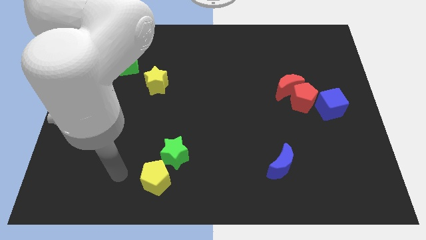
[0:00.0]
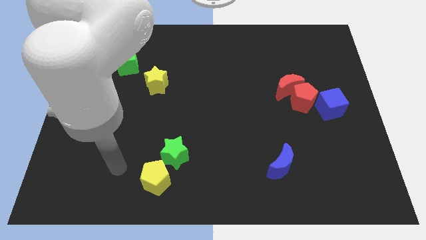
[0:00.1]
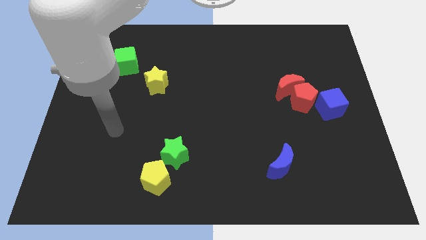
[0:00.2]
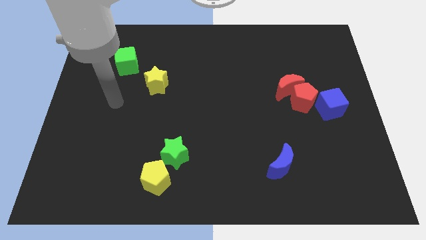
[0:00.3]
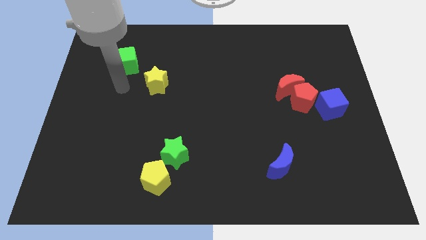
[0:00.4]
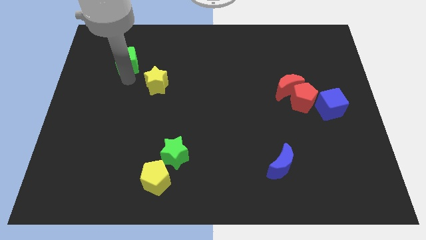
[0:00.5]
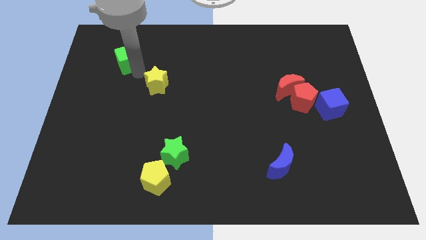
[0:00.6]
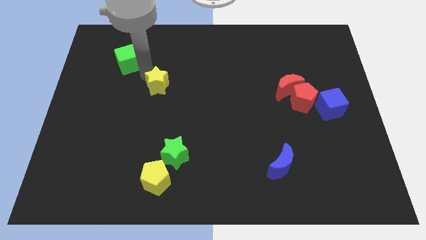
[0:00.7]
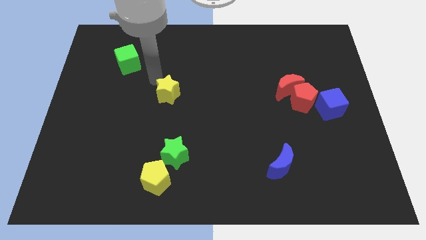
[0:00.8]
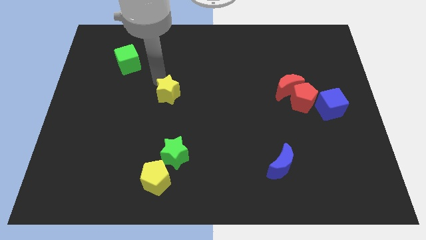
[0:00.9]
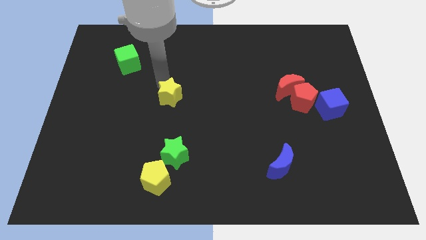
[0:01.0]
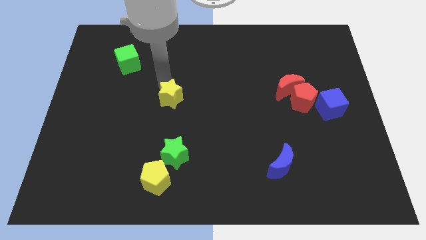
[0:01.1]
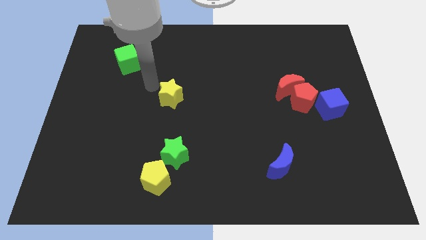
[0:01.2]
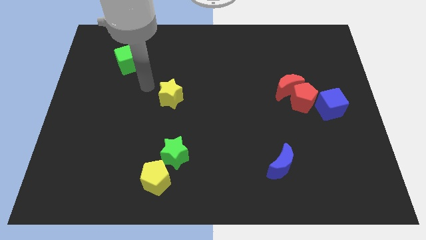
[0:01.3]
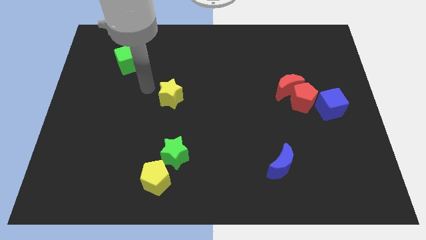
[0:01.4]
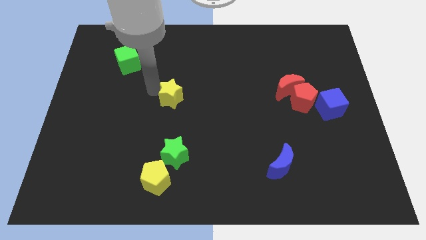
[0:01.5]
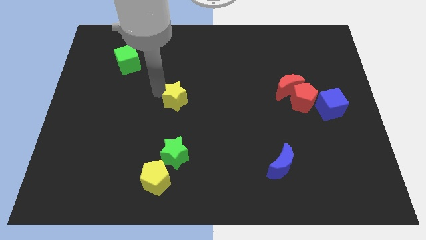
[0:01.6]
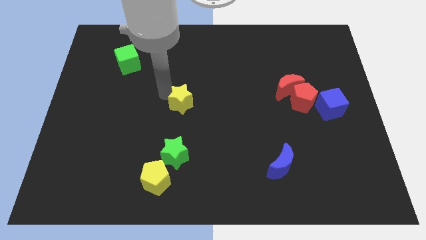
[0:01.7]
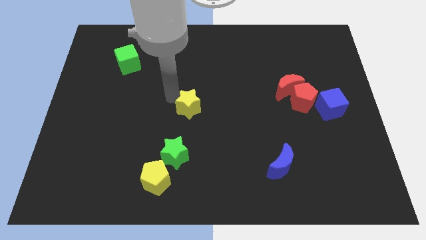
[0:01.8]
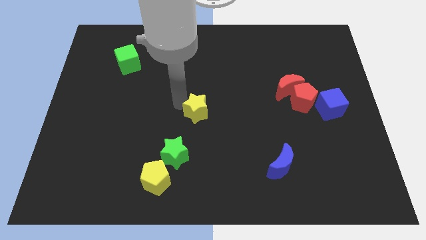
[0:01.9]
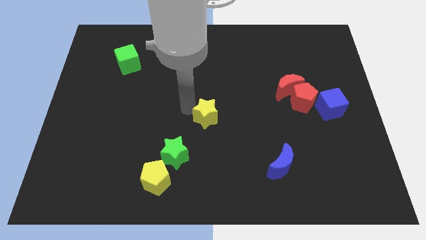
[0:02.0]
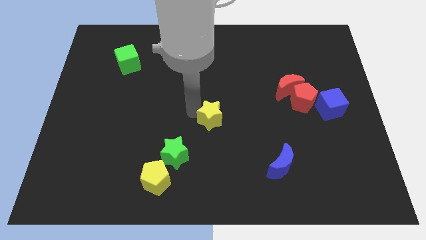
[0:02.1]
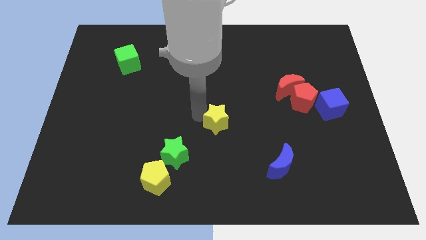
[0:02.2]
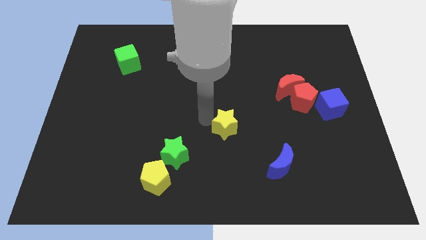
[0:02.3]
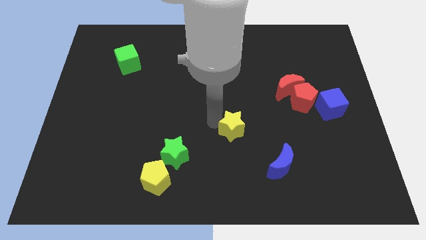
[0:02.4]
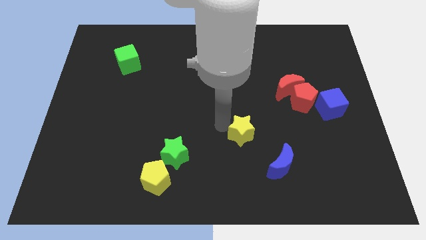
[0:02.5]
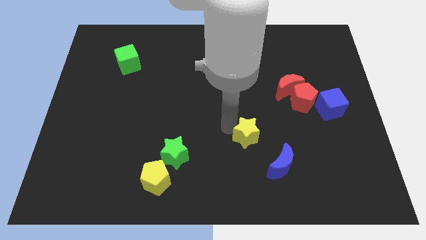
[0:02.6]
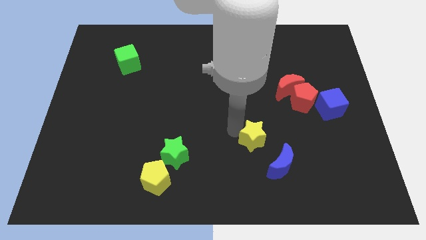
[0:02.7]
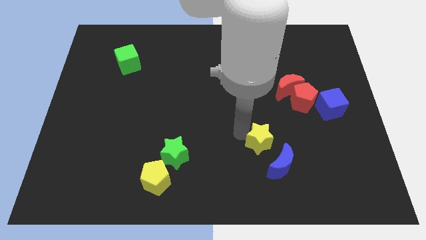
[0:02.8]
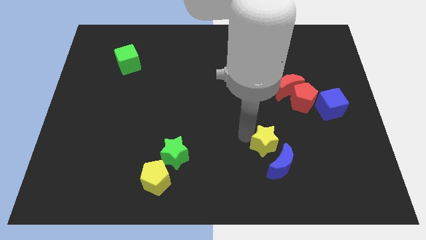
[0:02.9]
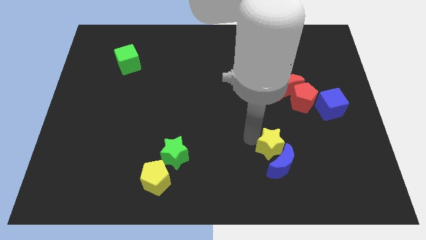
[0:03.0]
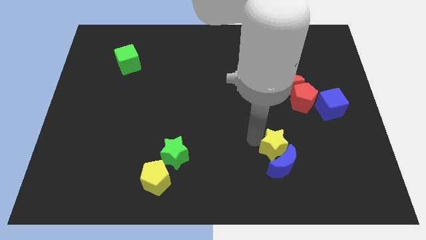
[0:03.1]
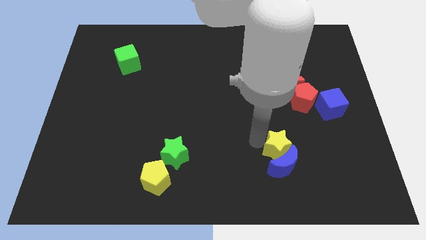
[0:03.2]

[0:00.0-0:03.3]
slide the yellow star close to the blue moon

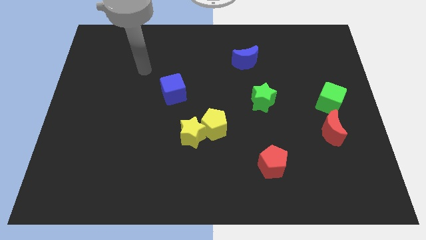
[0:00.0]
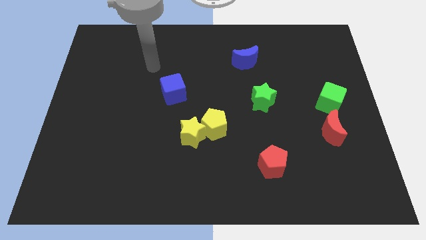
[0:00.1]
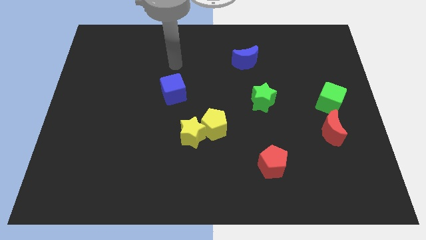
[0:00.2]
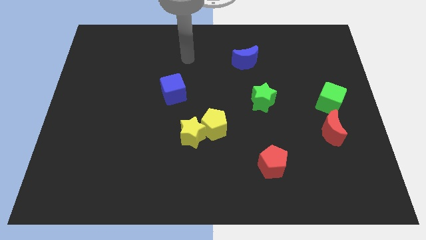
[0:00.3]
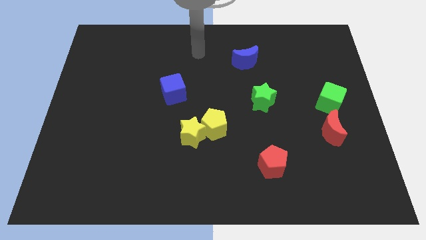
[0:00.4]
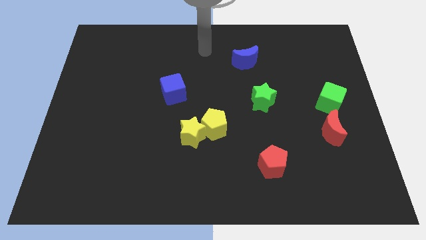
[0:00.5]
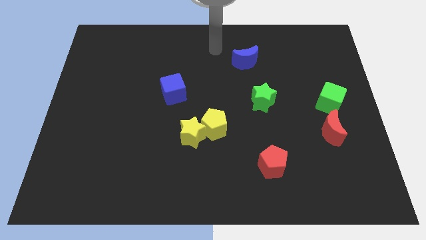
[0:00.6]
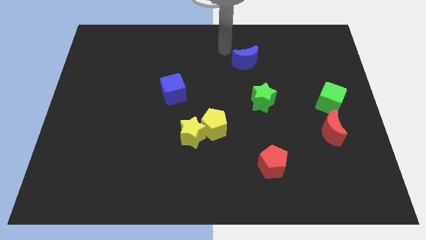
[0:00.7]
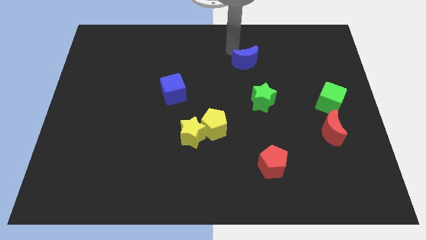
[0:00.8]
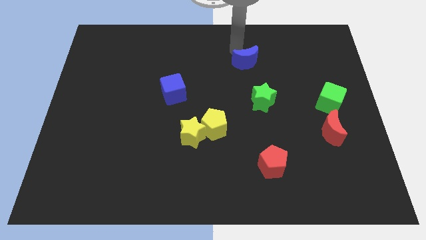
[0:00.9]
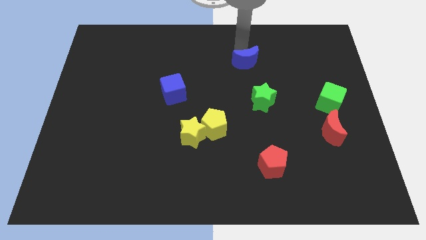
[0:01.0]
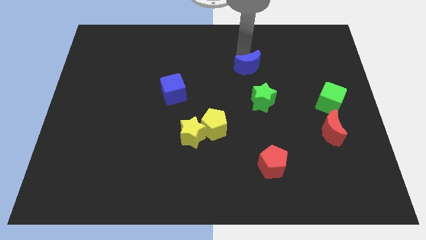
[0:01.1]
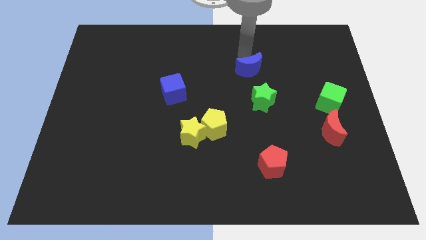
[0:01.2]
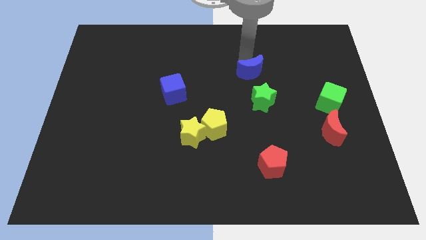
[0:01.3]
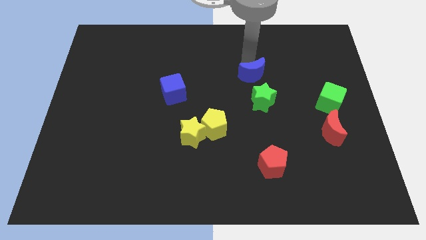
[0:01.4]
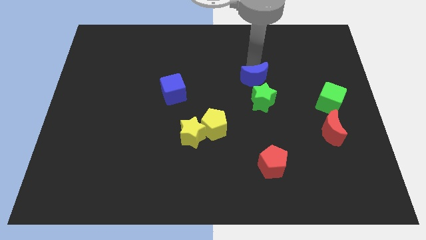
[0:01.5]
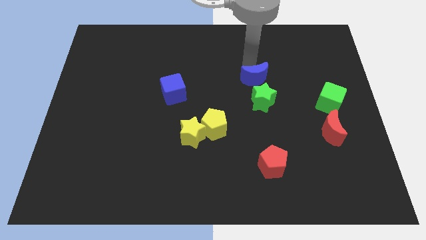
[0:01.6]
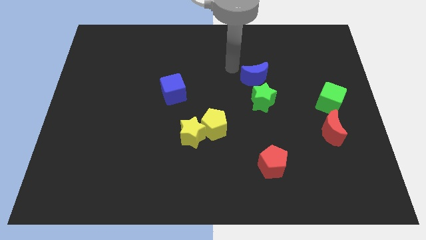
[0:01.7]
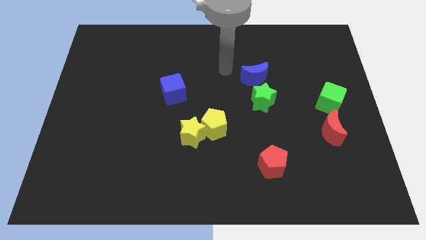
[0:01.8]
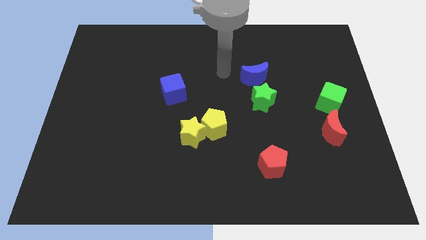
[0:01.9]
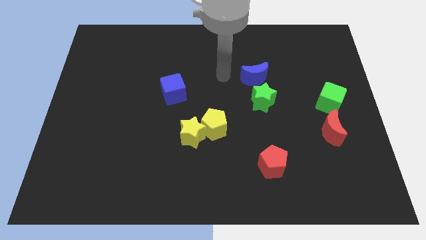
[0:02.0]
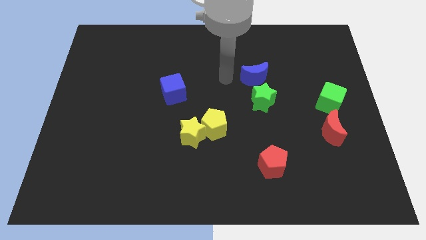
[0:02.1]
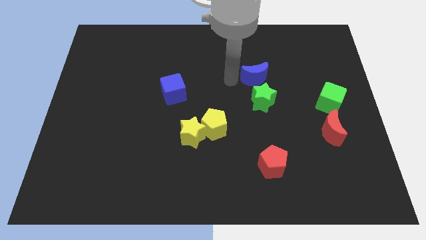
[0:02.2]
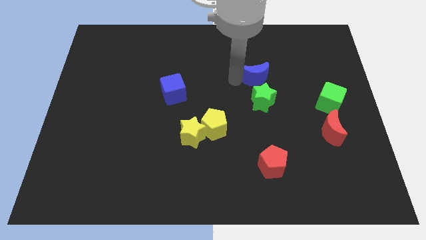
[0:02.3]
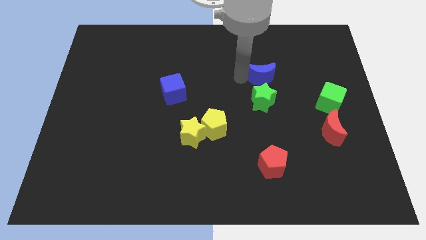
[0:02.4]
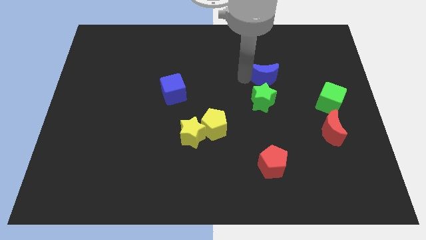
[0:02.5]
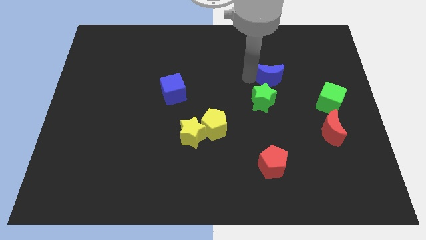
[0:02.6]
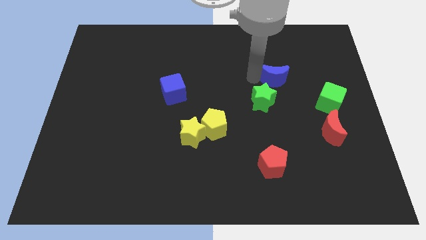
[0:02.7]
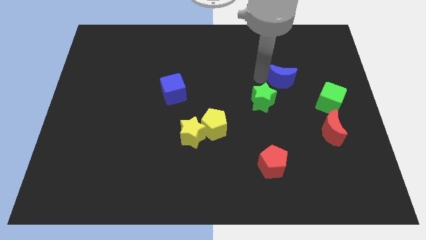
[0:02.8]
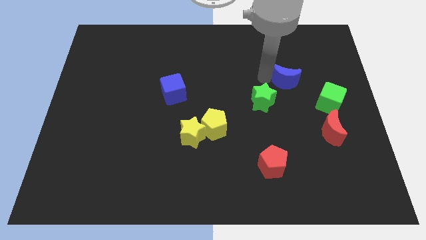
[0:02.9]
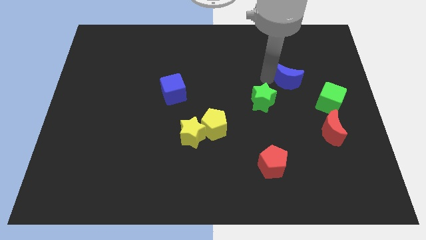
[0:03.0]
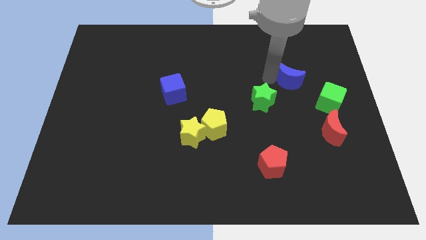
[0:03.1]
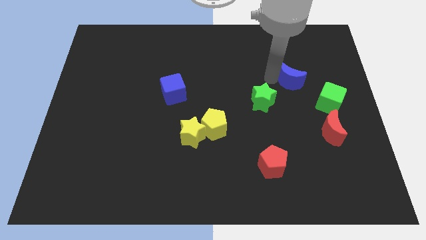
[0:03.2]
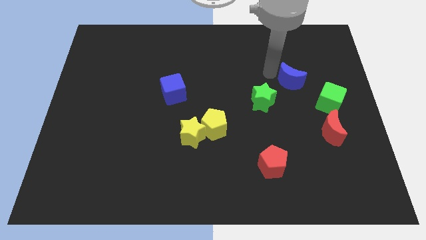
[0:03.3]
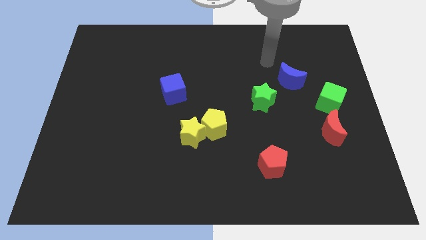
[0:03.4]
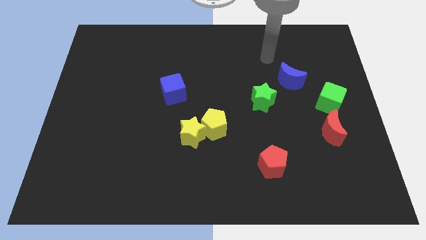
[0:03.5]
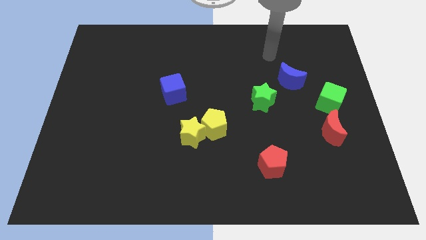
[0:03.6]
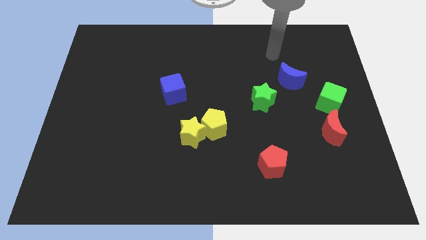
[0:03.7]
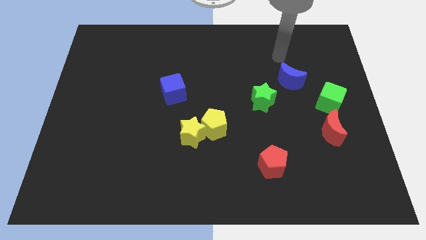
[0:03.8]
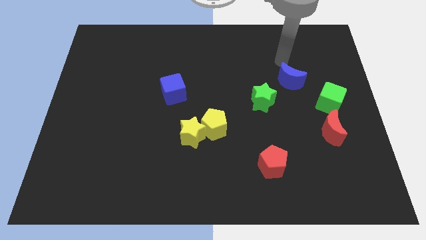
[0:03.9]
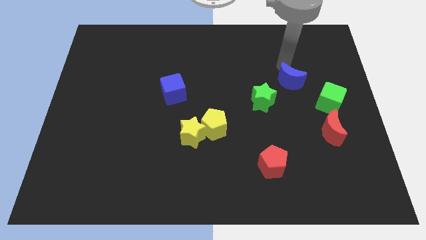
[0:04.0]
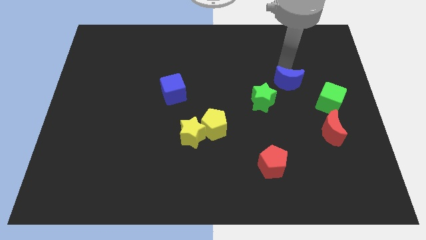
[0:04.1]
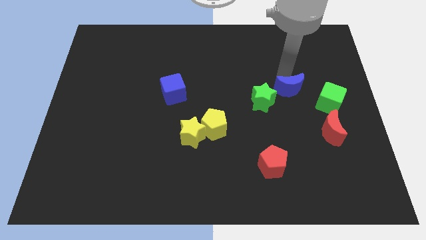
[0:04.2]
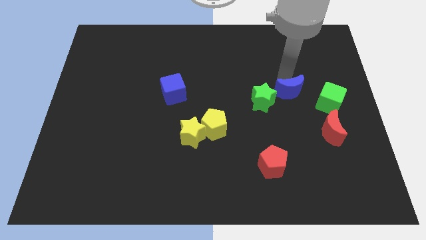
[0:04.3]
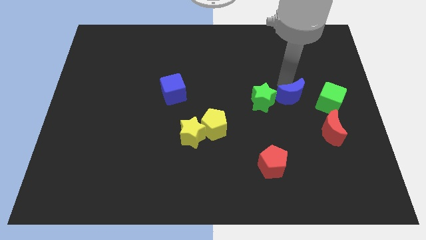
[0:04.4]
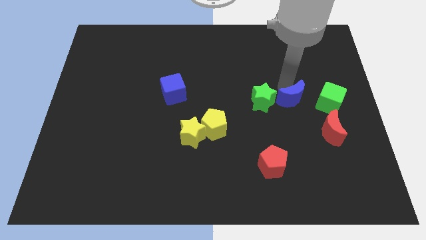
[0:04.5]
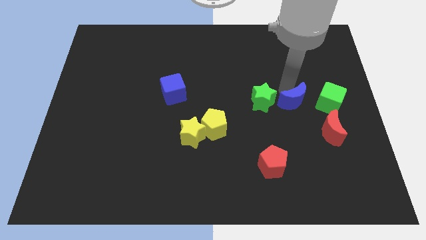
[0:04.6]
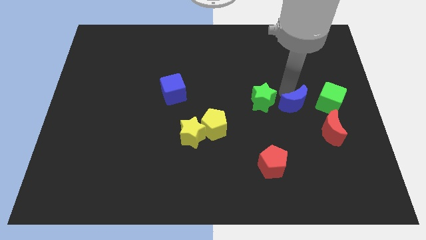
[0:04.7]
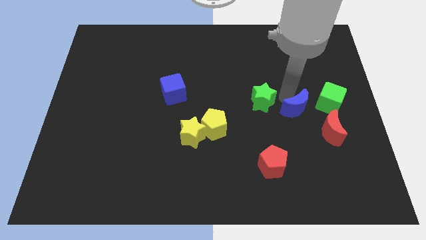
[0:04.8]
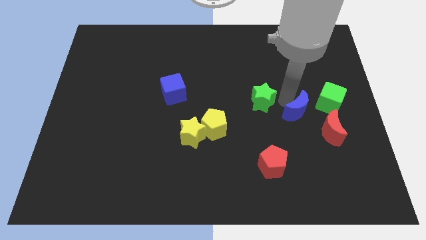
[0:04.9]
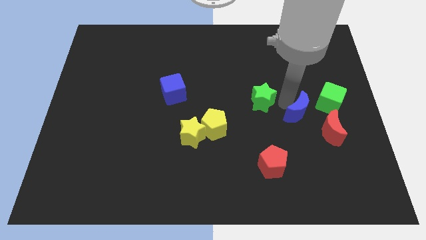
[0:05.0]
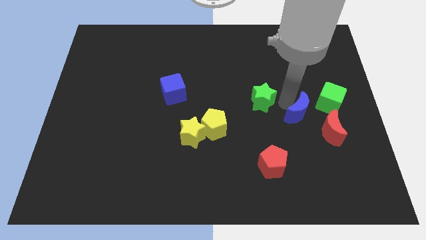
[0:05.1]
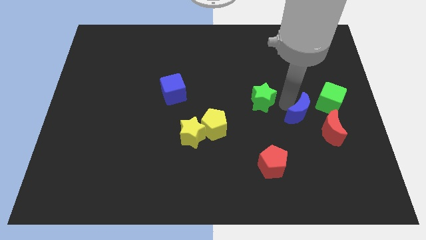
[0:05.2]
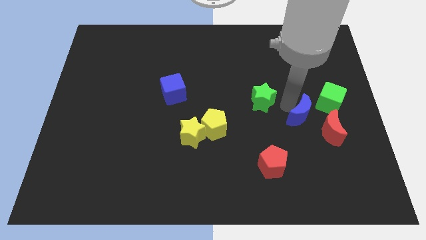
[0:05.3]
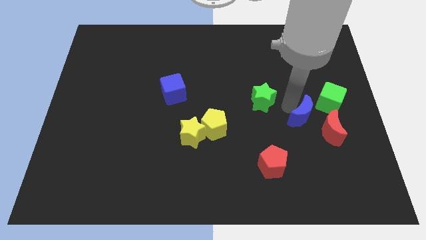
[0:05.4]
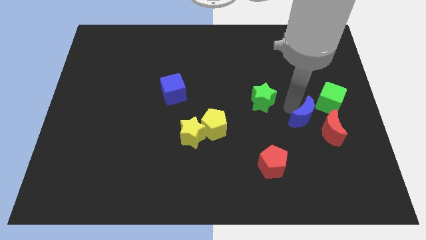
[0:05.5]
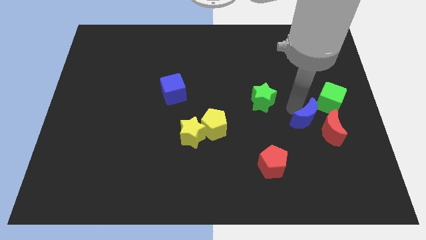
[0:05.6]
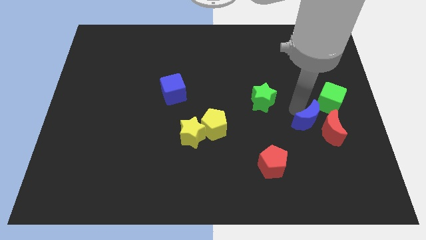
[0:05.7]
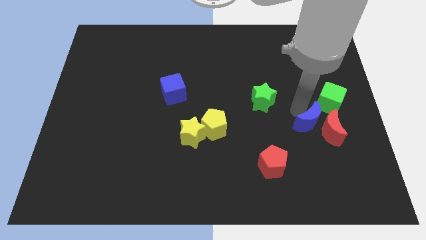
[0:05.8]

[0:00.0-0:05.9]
push the blue moon close to the red moon
